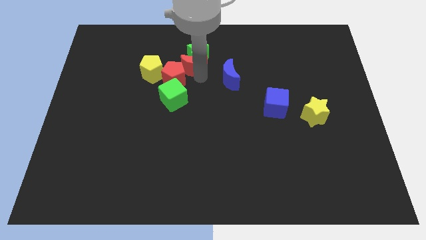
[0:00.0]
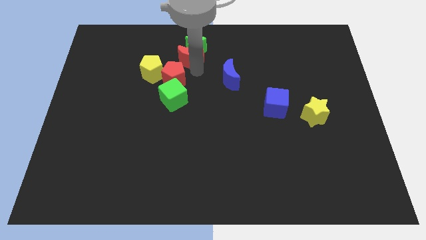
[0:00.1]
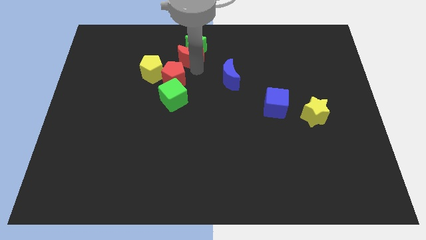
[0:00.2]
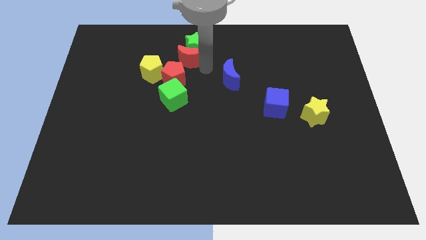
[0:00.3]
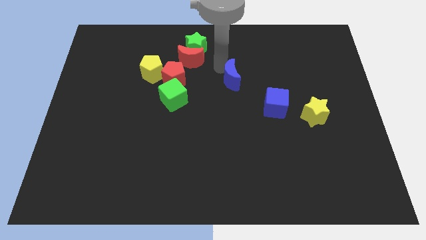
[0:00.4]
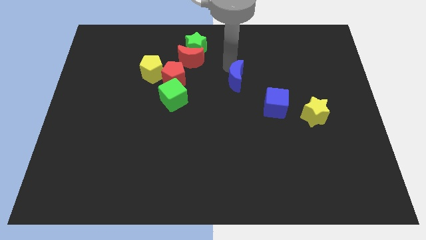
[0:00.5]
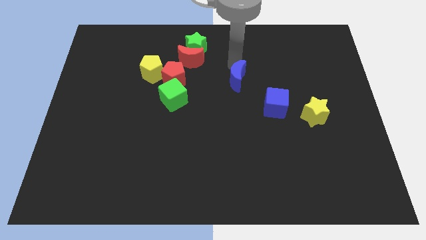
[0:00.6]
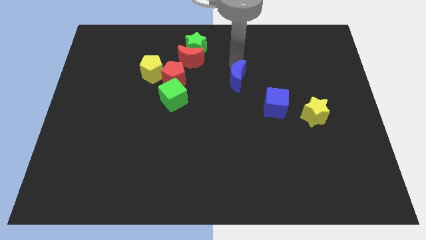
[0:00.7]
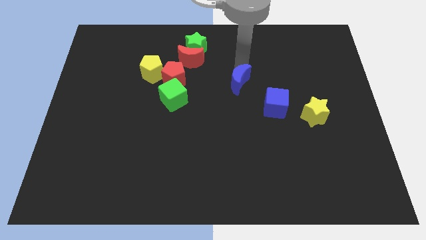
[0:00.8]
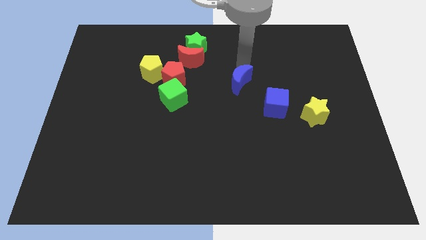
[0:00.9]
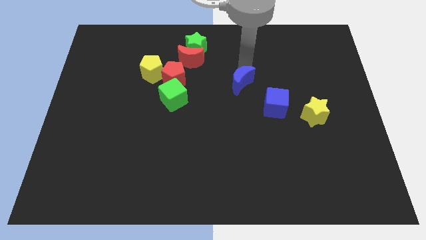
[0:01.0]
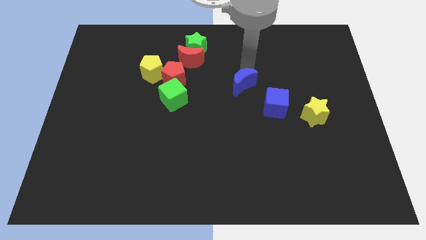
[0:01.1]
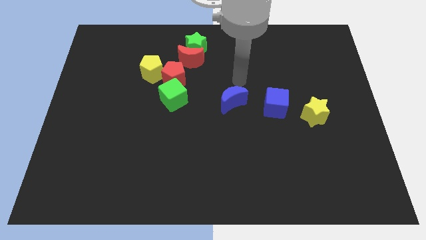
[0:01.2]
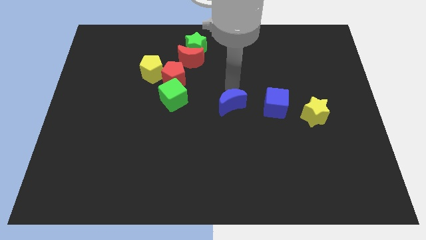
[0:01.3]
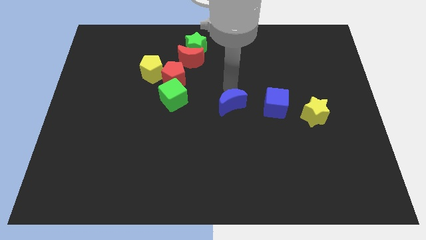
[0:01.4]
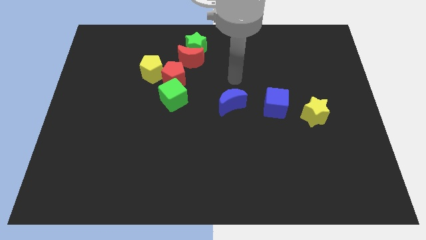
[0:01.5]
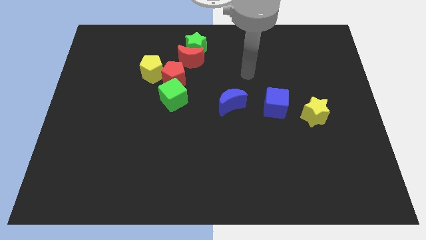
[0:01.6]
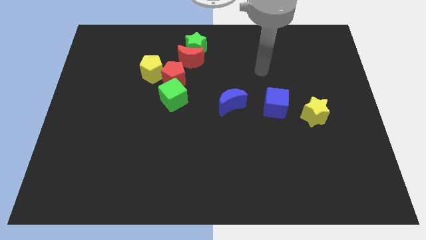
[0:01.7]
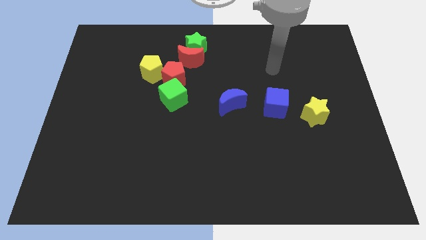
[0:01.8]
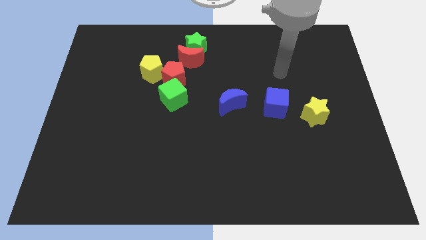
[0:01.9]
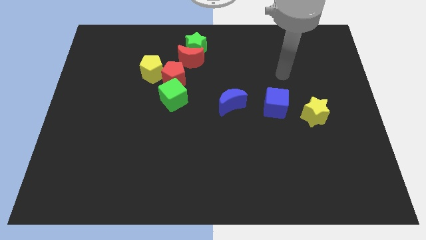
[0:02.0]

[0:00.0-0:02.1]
push the blue moon towards the center of the board

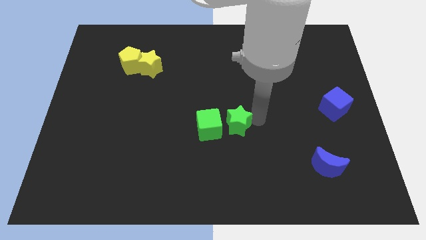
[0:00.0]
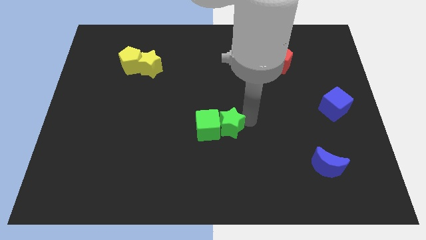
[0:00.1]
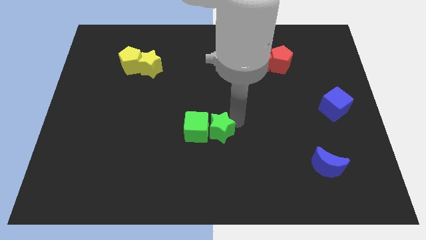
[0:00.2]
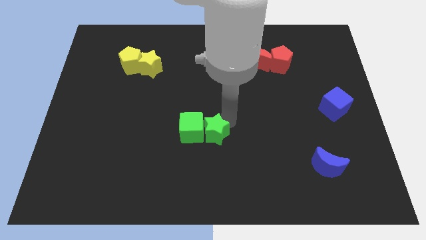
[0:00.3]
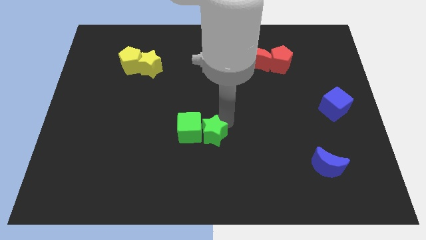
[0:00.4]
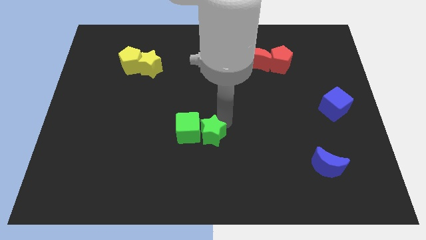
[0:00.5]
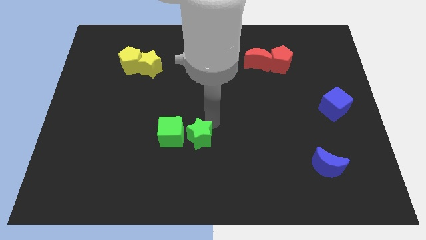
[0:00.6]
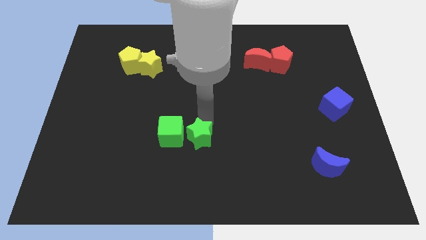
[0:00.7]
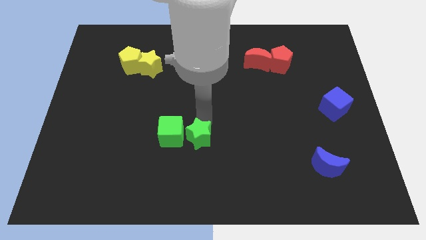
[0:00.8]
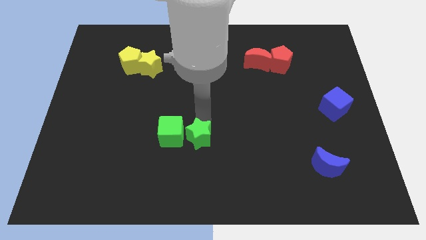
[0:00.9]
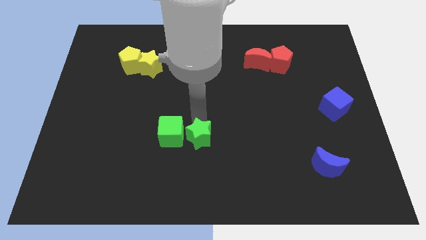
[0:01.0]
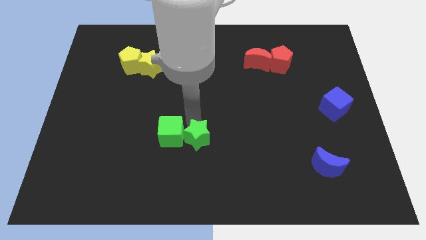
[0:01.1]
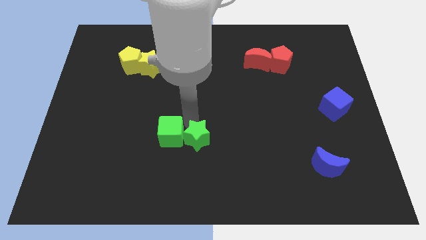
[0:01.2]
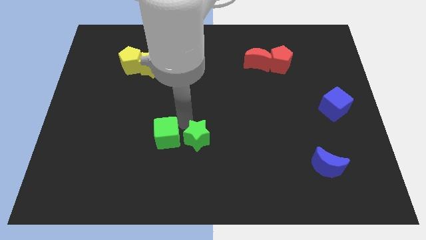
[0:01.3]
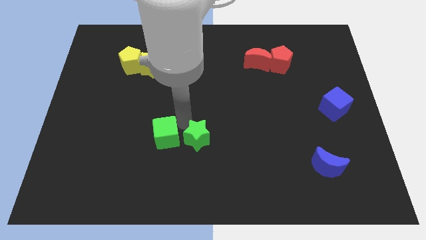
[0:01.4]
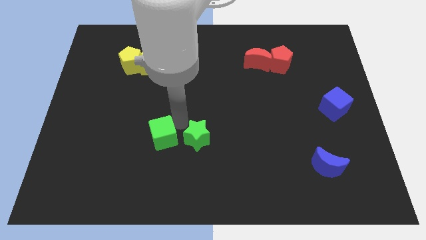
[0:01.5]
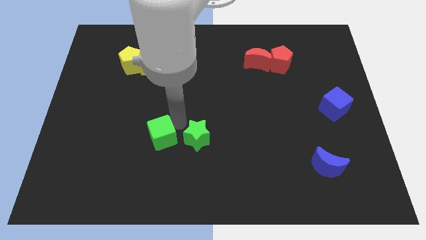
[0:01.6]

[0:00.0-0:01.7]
push the green blocks

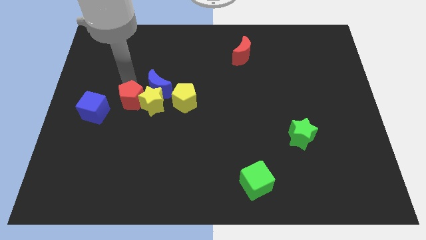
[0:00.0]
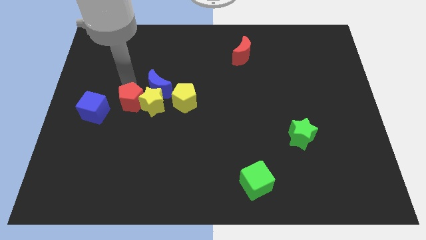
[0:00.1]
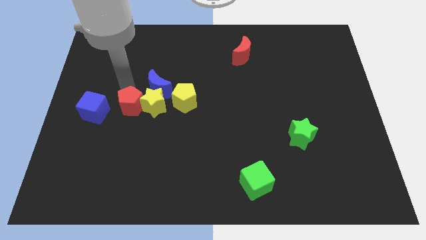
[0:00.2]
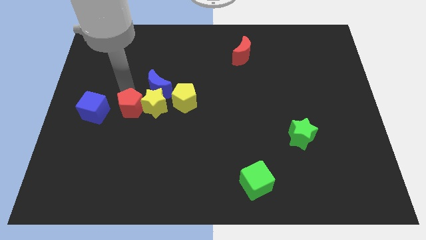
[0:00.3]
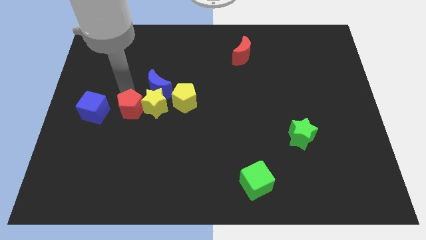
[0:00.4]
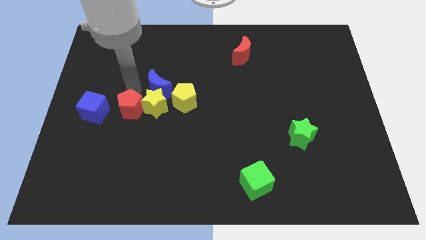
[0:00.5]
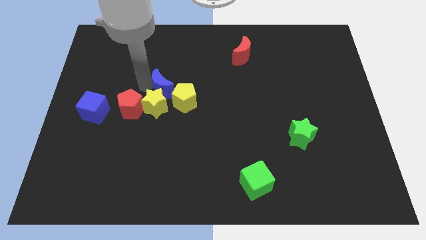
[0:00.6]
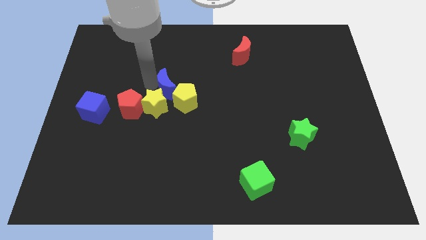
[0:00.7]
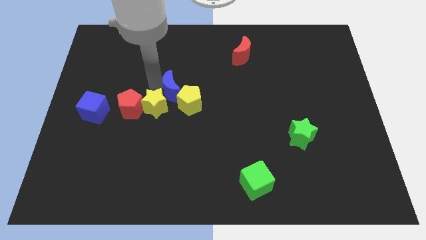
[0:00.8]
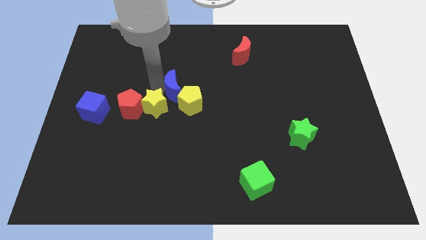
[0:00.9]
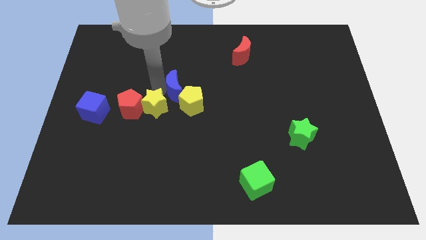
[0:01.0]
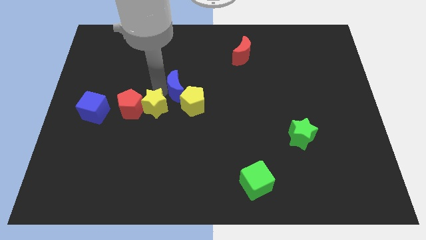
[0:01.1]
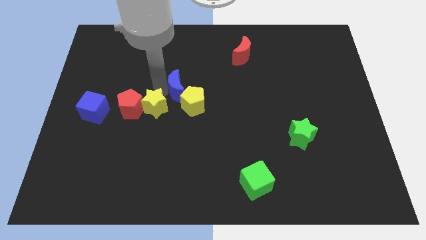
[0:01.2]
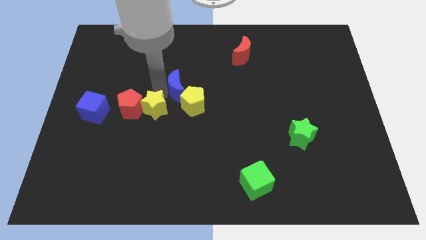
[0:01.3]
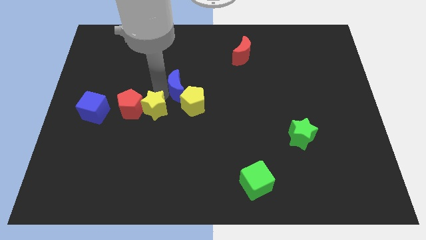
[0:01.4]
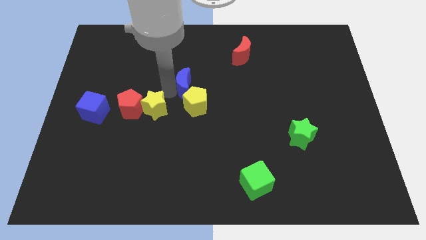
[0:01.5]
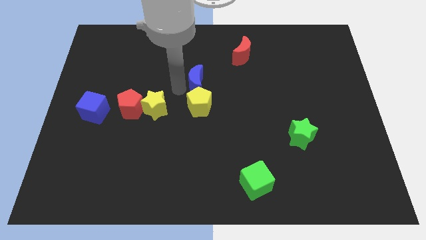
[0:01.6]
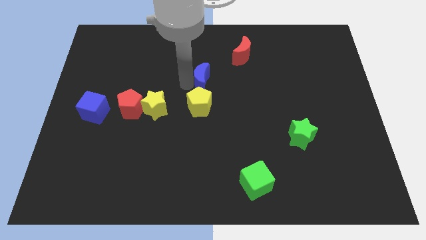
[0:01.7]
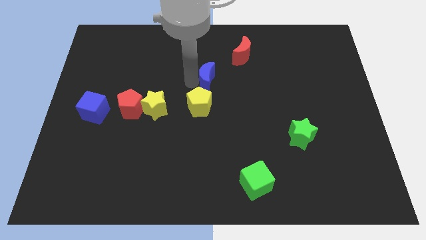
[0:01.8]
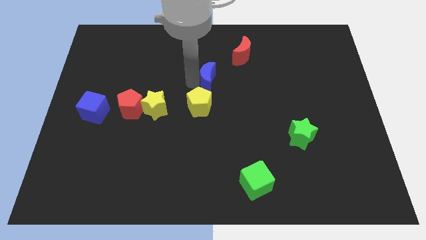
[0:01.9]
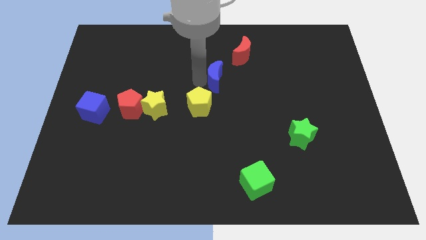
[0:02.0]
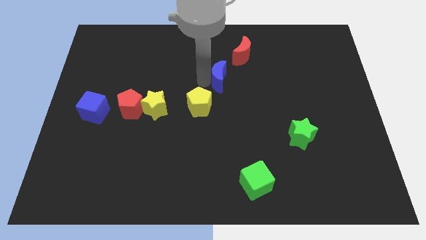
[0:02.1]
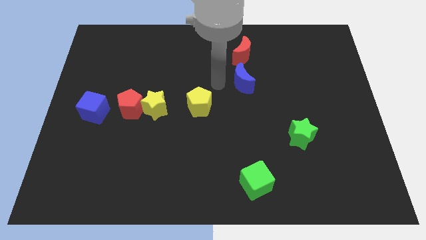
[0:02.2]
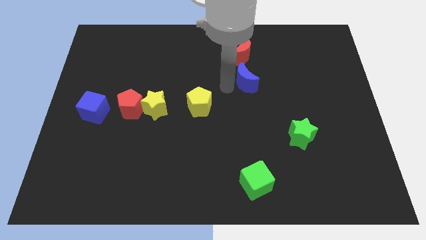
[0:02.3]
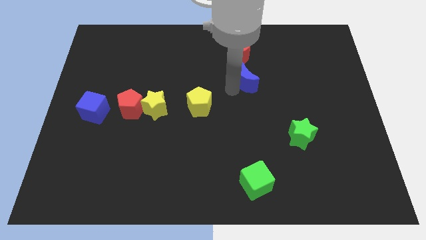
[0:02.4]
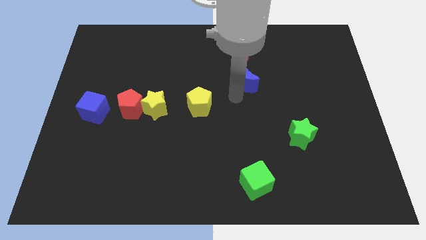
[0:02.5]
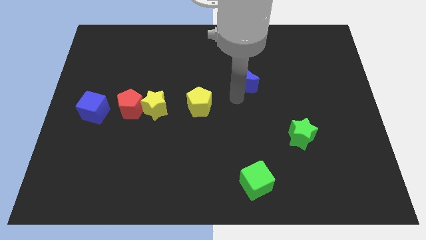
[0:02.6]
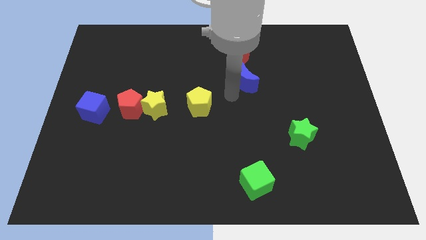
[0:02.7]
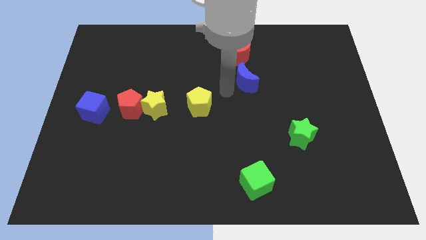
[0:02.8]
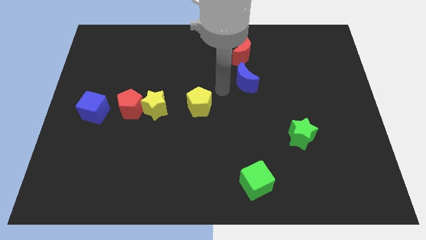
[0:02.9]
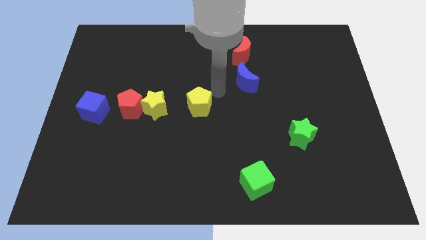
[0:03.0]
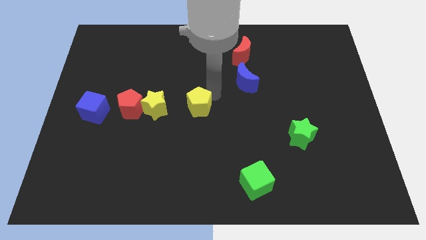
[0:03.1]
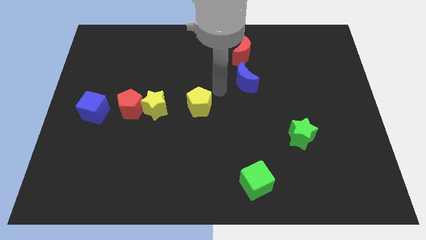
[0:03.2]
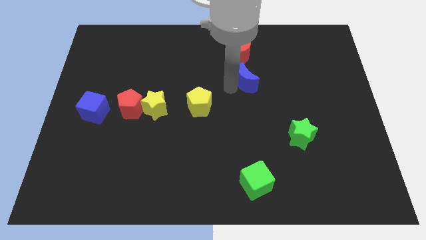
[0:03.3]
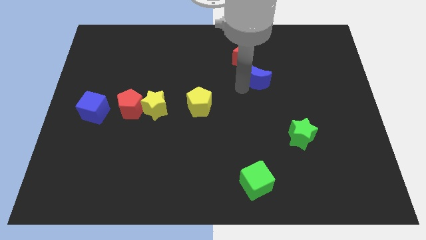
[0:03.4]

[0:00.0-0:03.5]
move the blue moon to the bottom of the red crescent

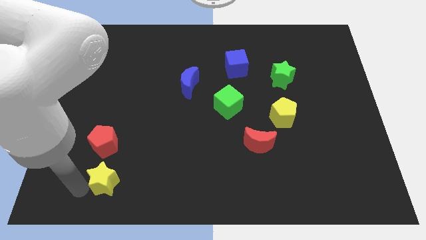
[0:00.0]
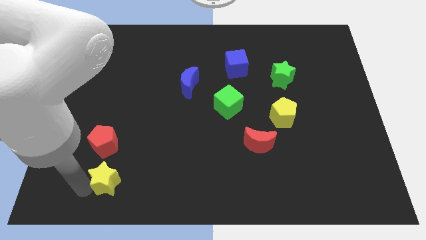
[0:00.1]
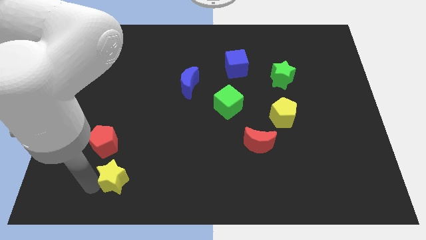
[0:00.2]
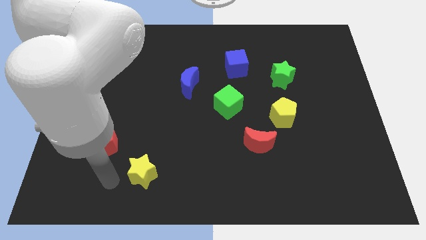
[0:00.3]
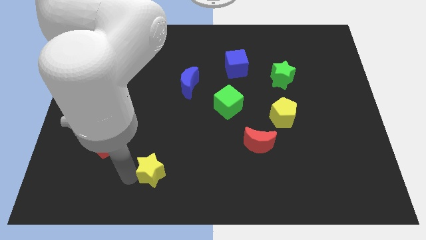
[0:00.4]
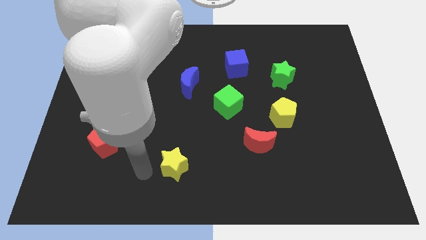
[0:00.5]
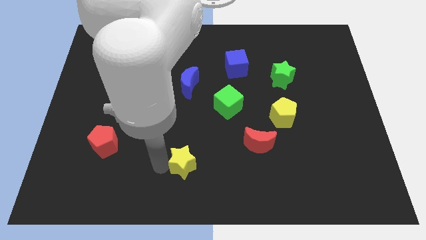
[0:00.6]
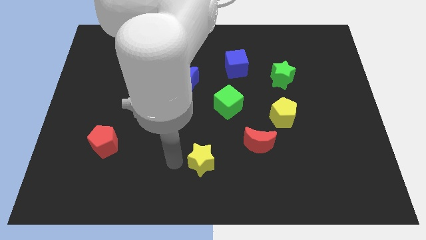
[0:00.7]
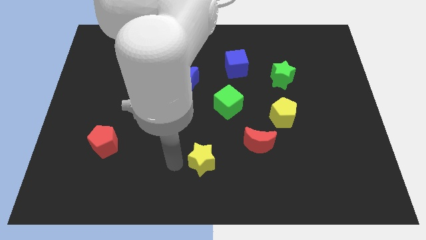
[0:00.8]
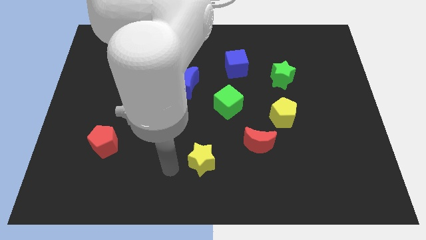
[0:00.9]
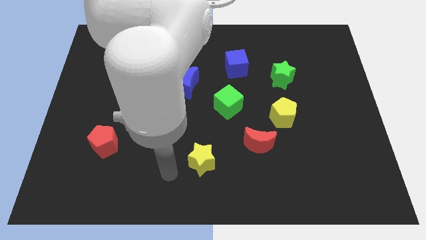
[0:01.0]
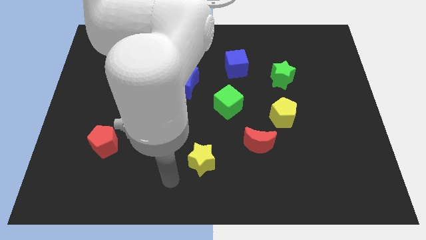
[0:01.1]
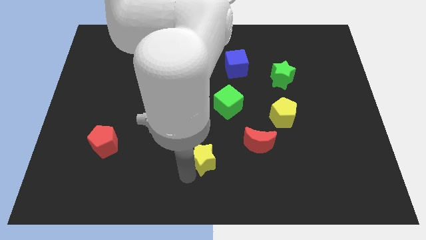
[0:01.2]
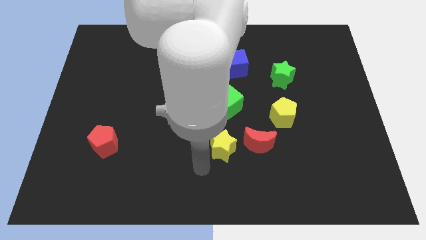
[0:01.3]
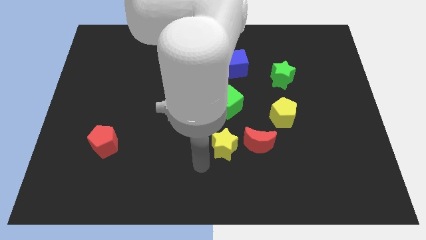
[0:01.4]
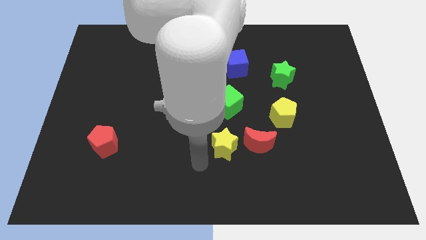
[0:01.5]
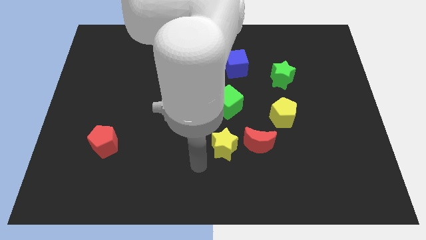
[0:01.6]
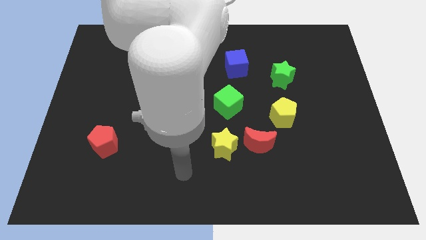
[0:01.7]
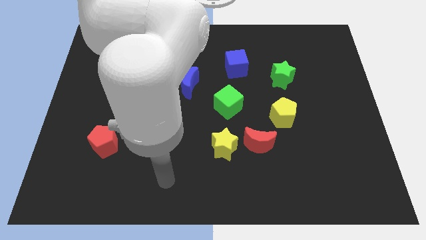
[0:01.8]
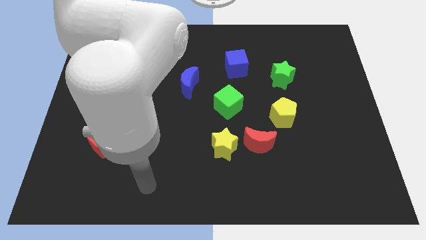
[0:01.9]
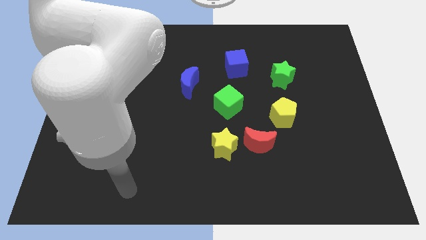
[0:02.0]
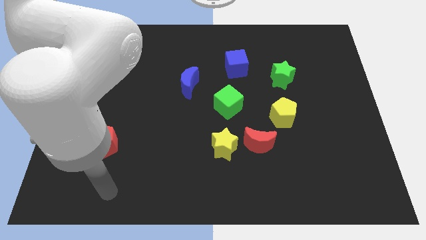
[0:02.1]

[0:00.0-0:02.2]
move the yellow star close to the red crescent
